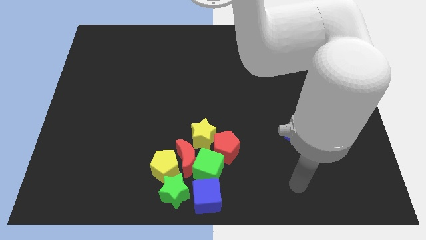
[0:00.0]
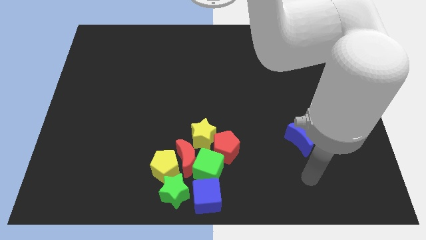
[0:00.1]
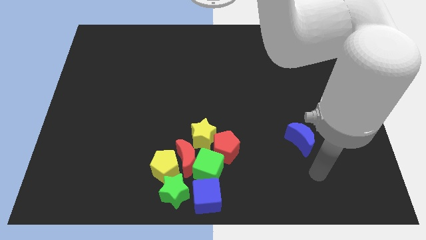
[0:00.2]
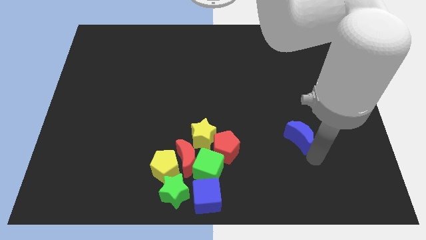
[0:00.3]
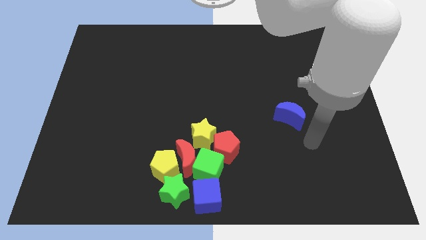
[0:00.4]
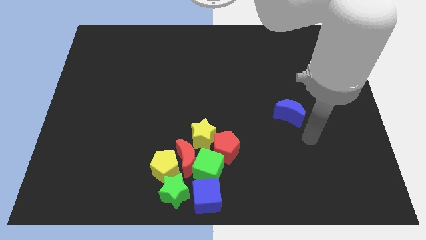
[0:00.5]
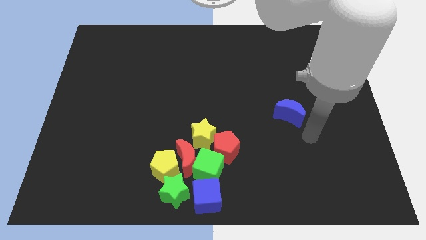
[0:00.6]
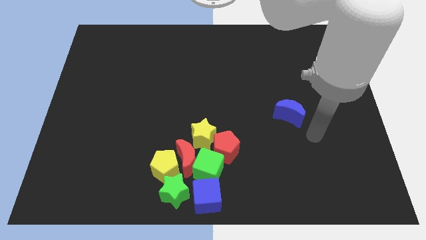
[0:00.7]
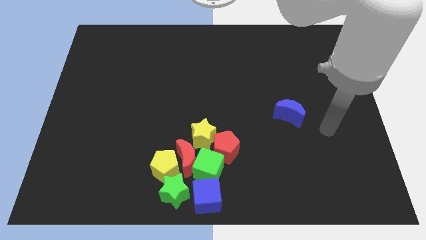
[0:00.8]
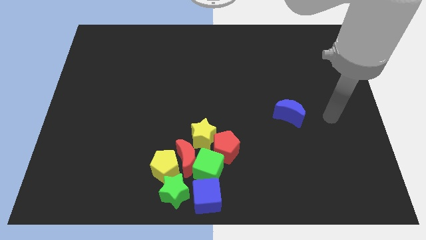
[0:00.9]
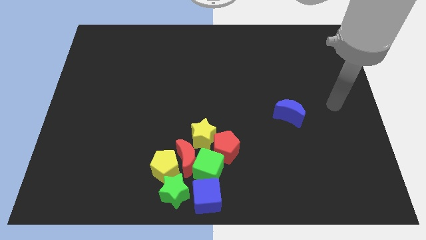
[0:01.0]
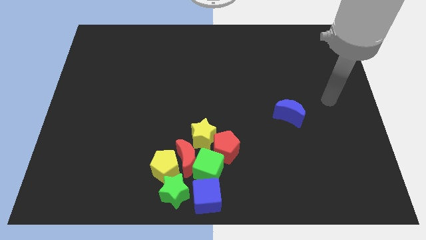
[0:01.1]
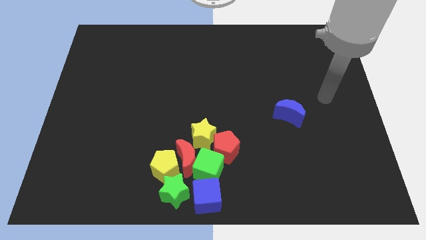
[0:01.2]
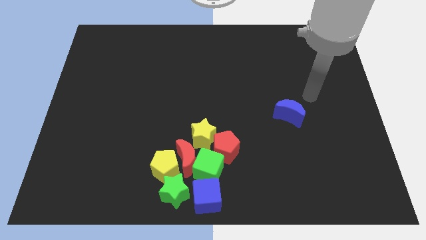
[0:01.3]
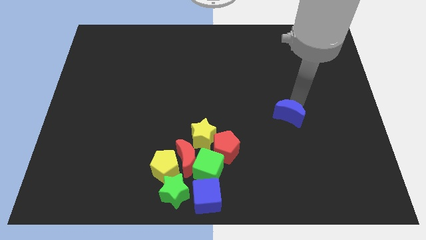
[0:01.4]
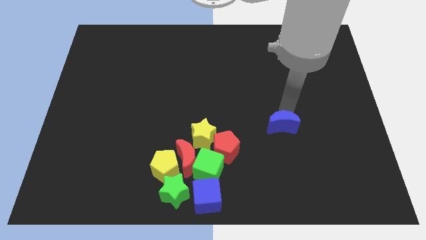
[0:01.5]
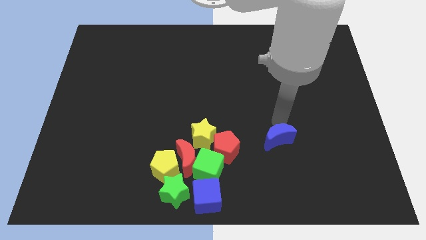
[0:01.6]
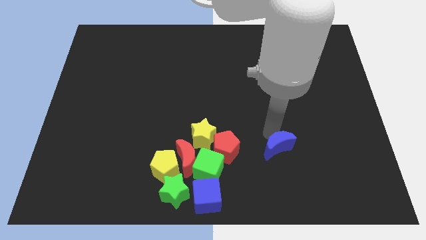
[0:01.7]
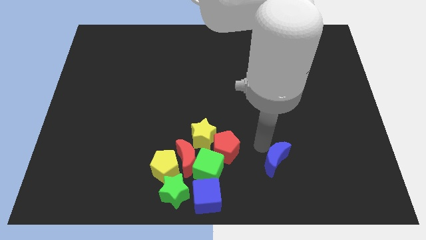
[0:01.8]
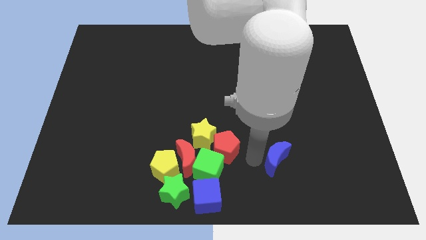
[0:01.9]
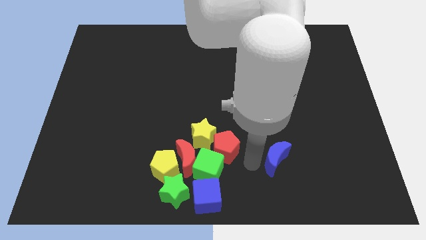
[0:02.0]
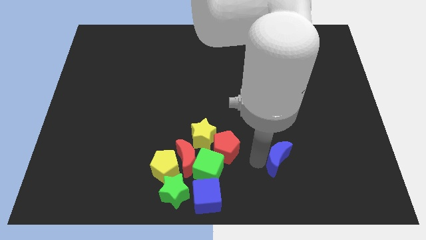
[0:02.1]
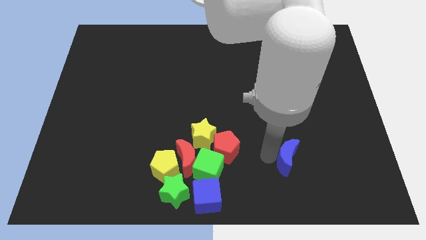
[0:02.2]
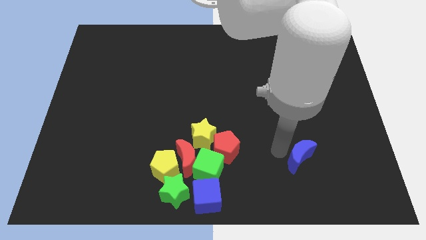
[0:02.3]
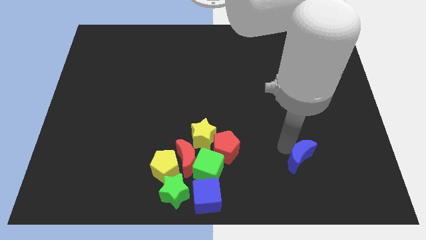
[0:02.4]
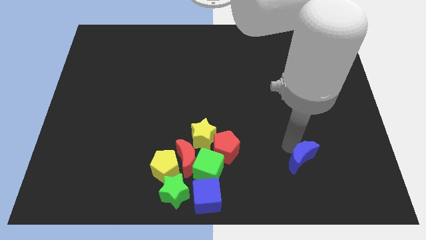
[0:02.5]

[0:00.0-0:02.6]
move the blue moon diagonally above the blue cube

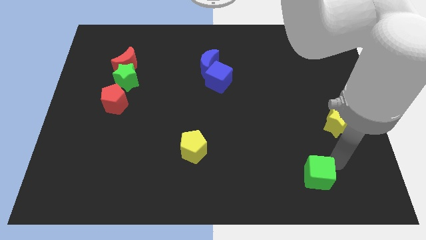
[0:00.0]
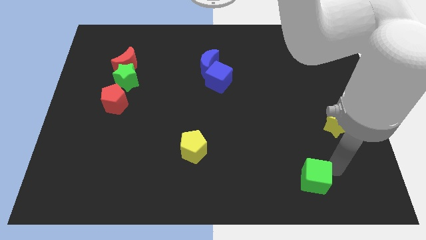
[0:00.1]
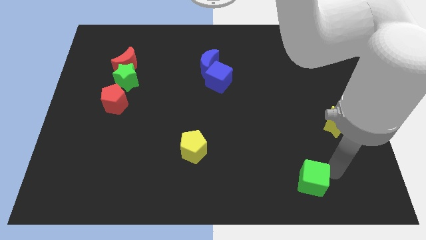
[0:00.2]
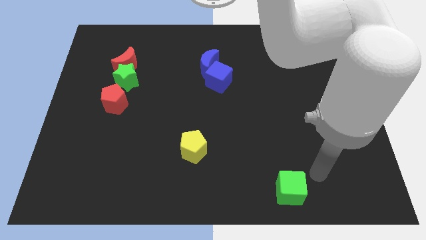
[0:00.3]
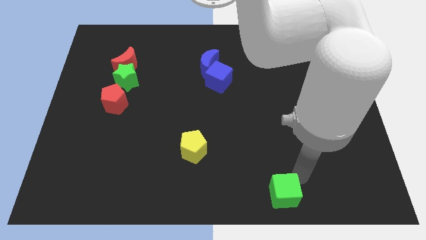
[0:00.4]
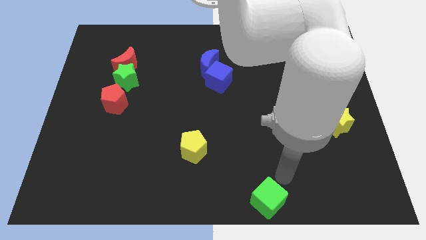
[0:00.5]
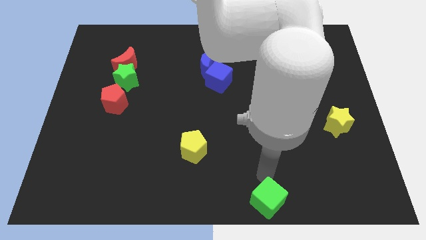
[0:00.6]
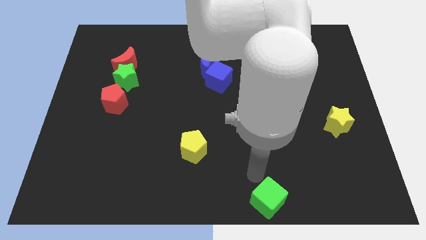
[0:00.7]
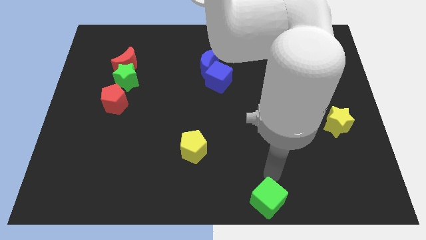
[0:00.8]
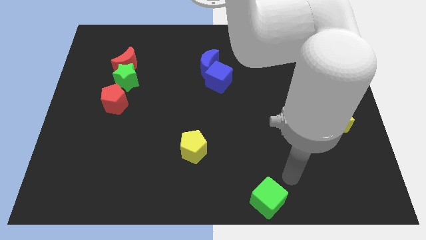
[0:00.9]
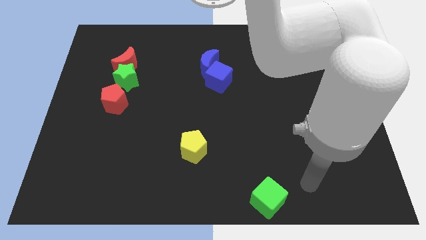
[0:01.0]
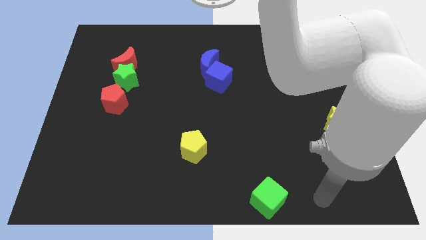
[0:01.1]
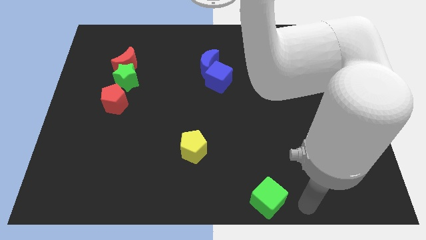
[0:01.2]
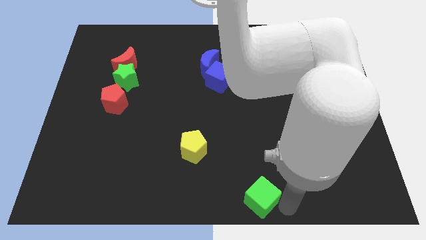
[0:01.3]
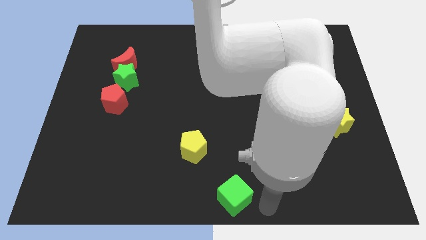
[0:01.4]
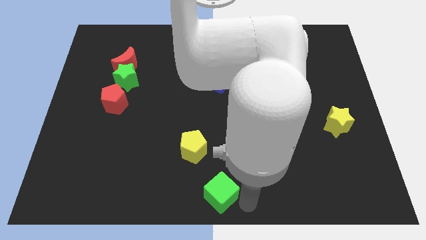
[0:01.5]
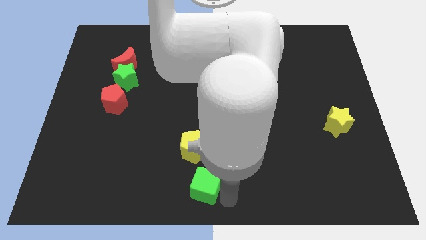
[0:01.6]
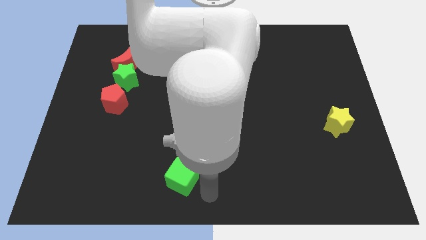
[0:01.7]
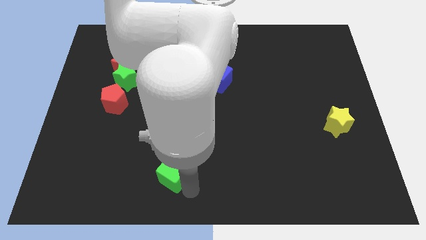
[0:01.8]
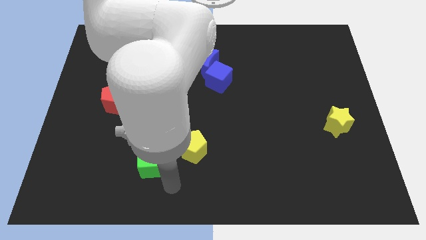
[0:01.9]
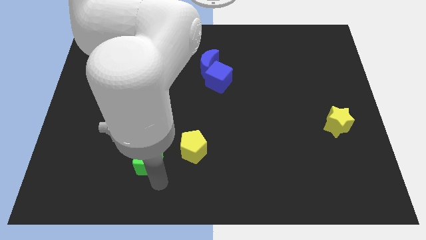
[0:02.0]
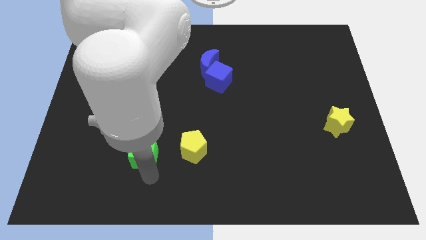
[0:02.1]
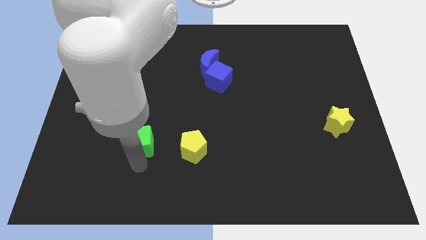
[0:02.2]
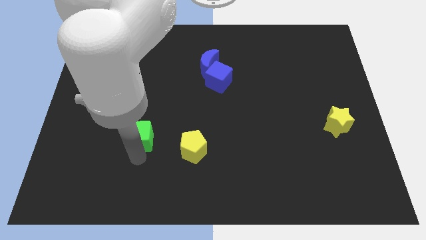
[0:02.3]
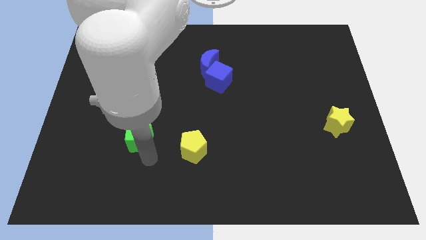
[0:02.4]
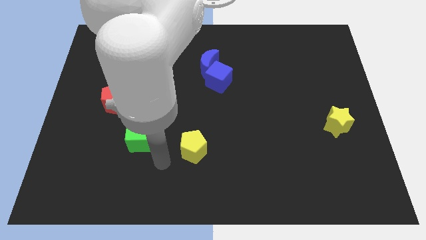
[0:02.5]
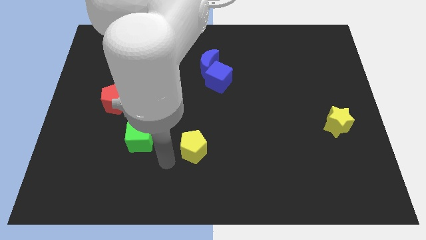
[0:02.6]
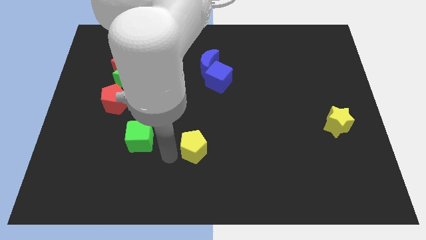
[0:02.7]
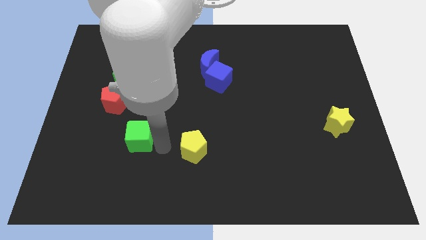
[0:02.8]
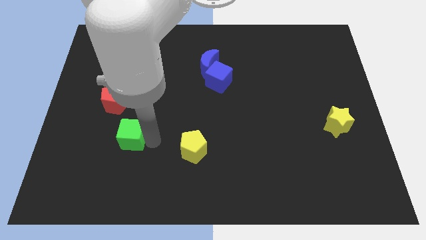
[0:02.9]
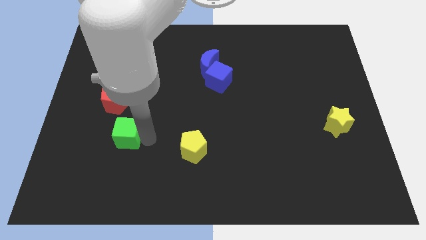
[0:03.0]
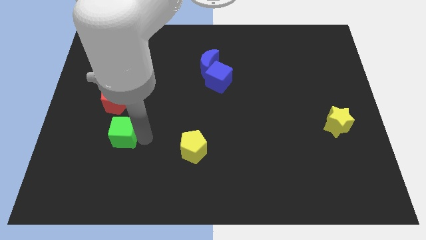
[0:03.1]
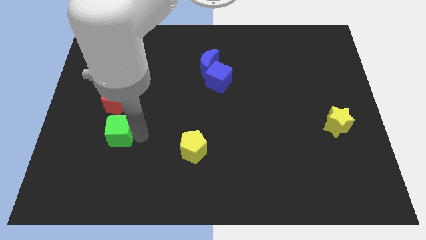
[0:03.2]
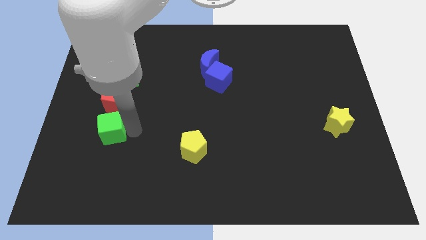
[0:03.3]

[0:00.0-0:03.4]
drag the green cube to the bottom of the red pentagon

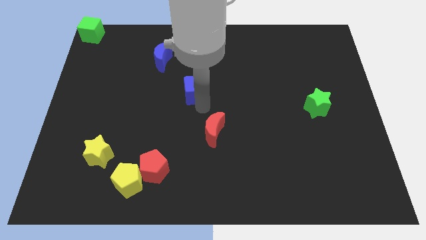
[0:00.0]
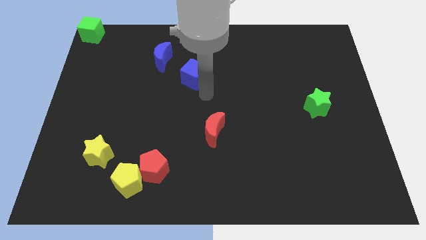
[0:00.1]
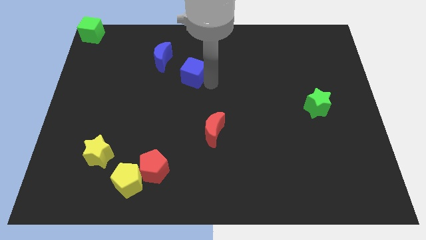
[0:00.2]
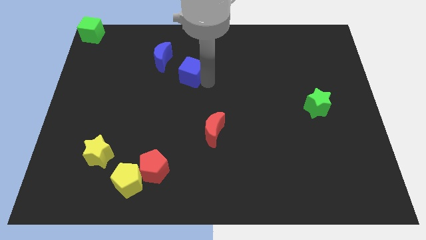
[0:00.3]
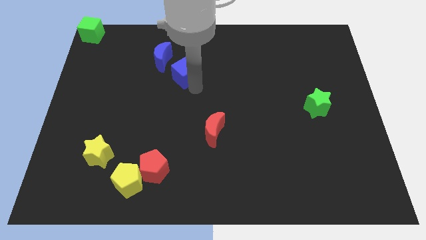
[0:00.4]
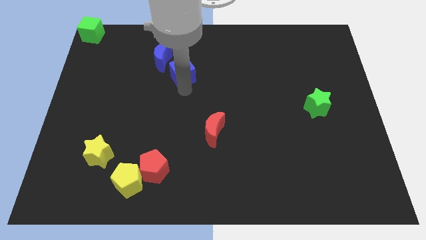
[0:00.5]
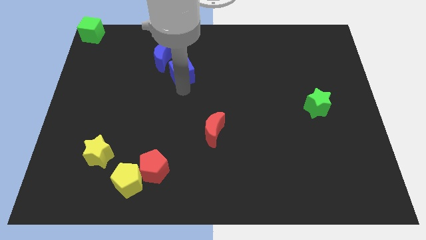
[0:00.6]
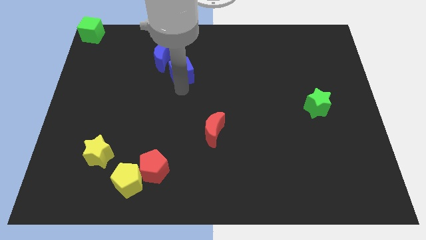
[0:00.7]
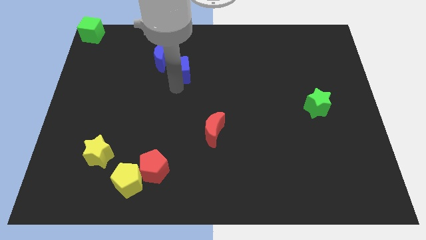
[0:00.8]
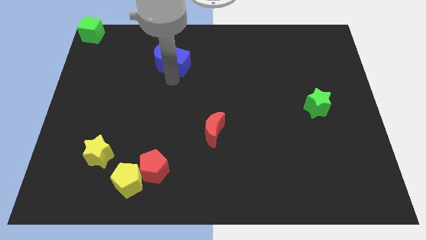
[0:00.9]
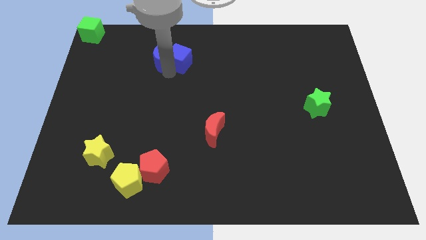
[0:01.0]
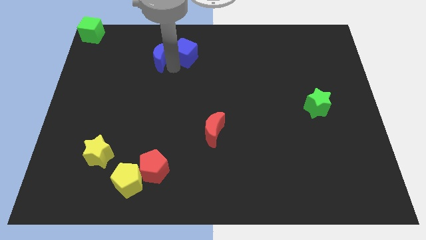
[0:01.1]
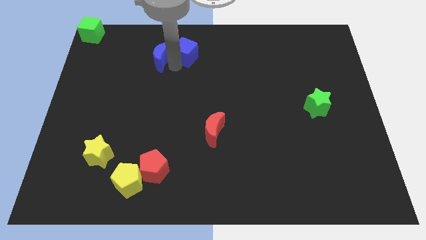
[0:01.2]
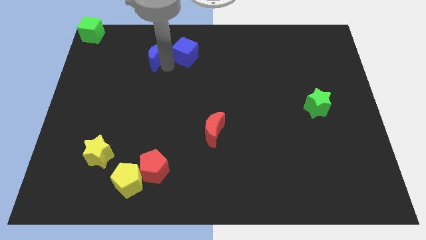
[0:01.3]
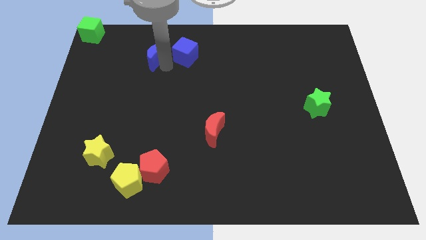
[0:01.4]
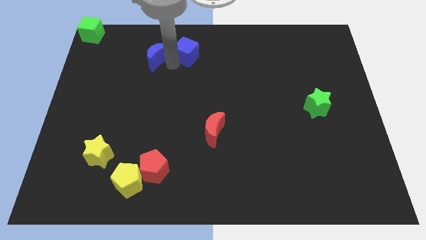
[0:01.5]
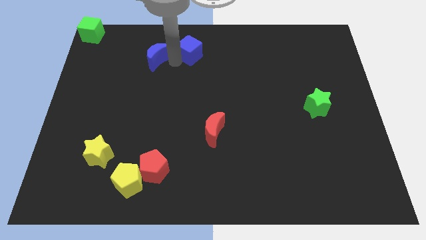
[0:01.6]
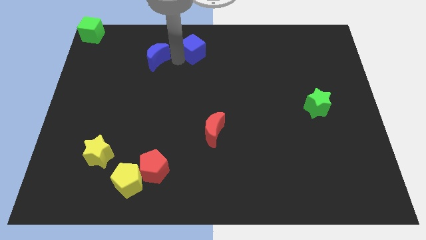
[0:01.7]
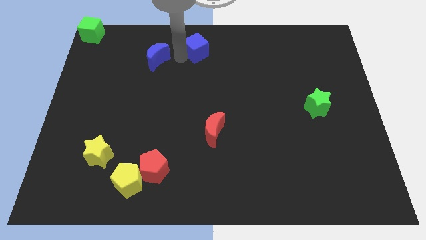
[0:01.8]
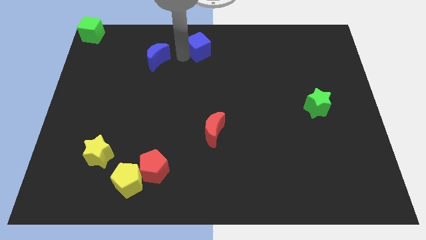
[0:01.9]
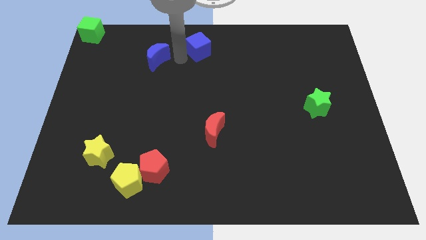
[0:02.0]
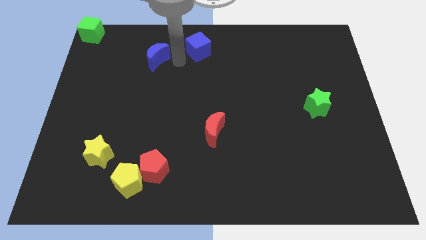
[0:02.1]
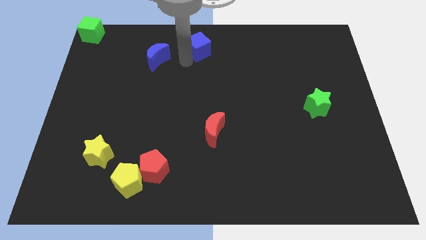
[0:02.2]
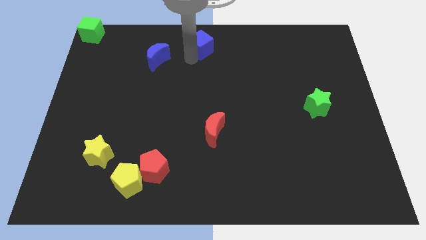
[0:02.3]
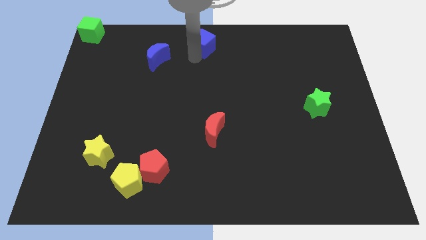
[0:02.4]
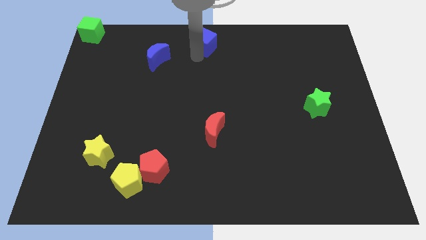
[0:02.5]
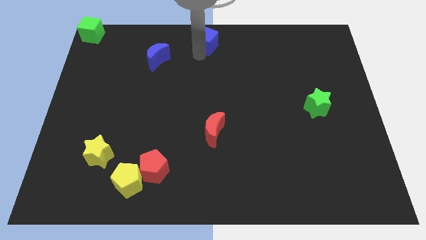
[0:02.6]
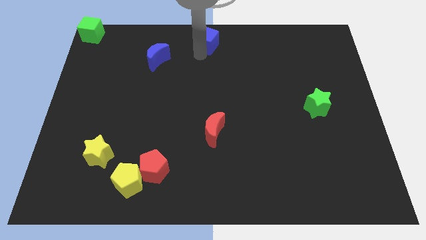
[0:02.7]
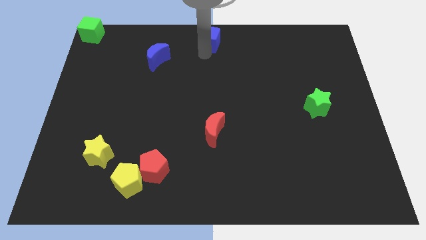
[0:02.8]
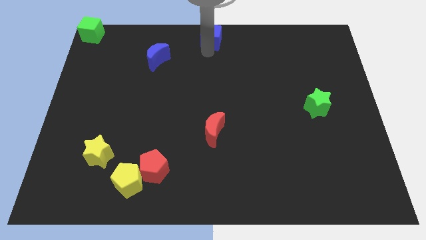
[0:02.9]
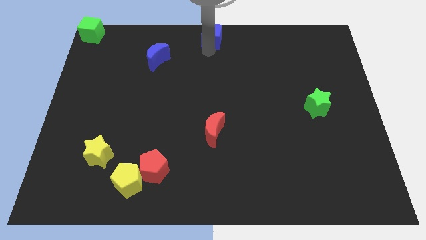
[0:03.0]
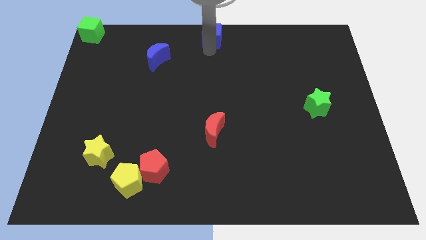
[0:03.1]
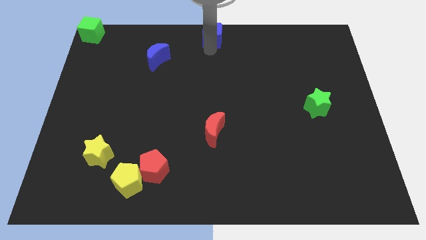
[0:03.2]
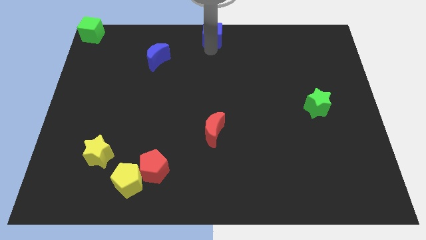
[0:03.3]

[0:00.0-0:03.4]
place the blue cube at the top center of the board
